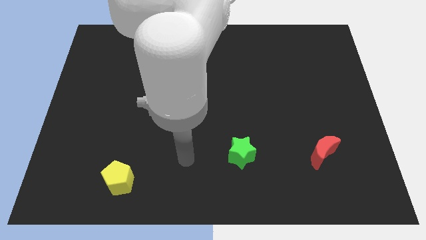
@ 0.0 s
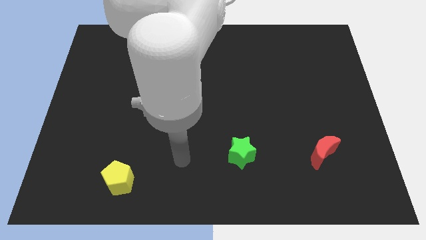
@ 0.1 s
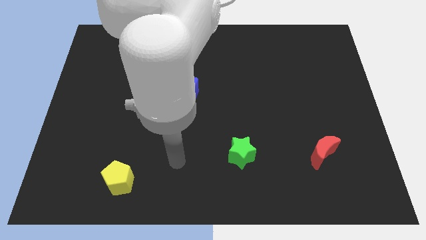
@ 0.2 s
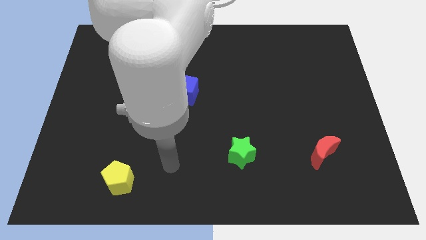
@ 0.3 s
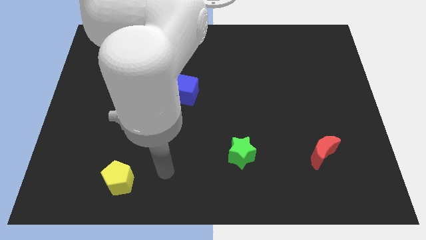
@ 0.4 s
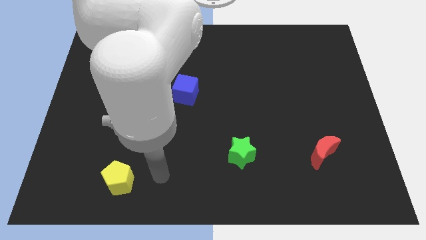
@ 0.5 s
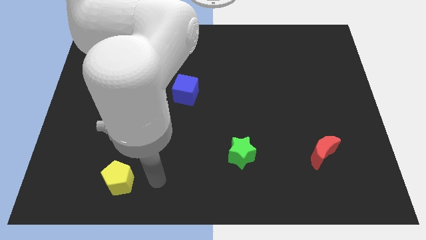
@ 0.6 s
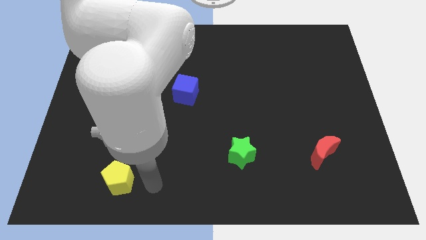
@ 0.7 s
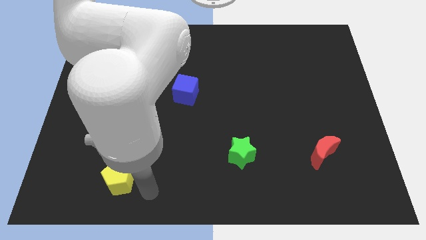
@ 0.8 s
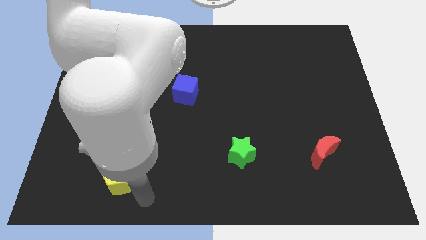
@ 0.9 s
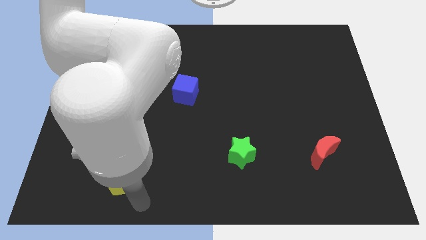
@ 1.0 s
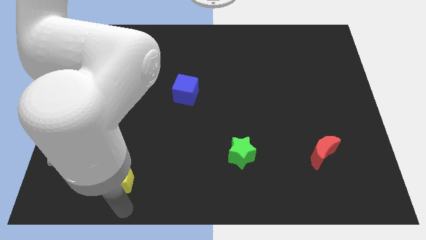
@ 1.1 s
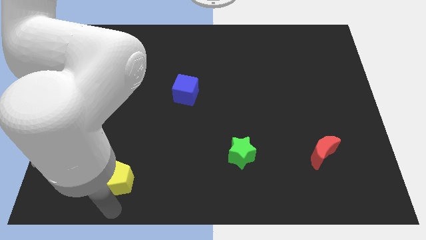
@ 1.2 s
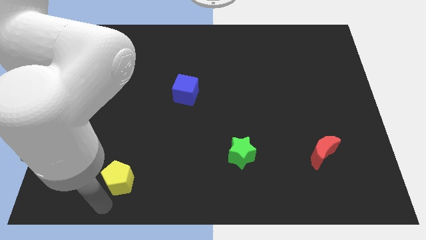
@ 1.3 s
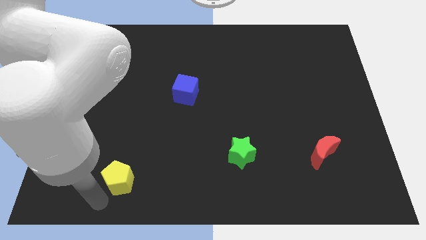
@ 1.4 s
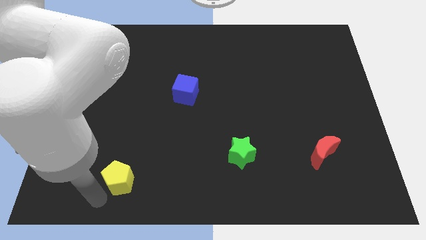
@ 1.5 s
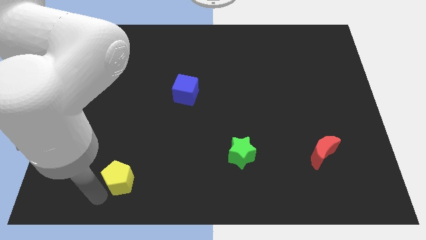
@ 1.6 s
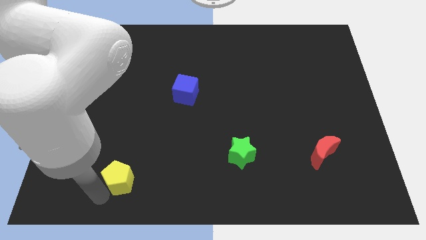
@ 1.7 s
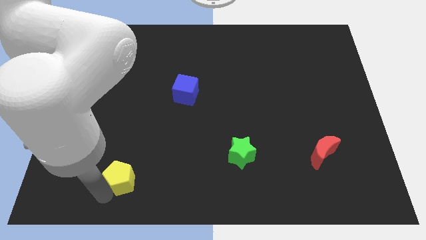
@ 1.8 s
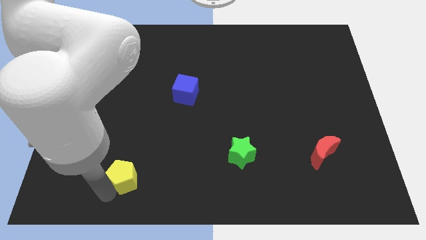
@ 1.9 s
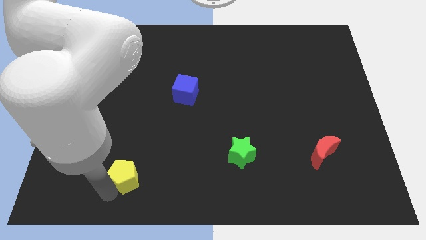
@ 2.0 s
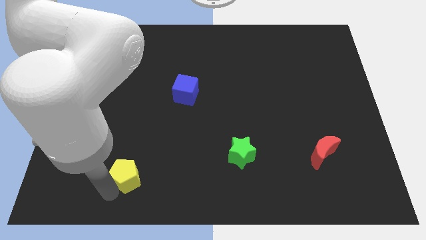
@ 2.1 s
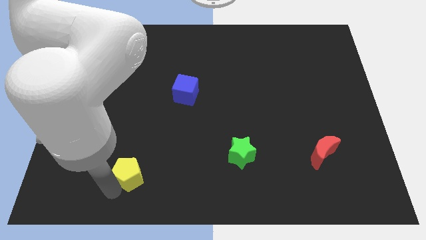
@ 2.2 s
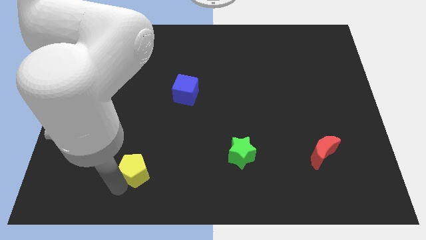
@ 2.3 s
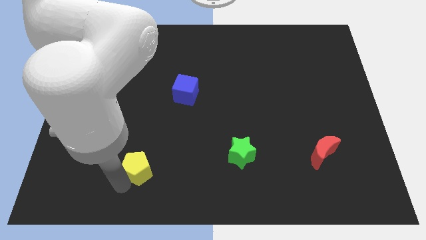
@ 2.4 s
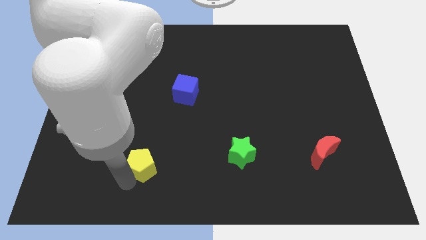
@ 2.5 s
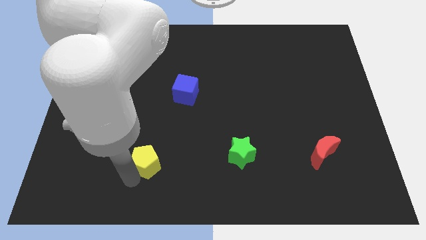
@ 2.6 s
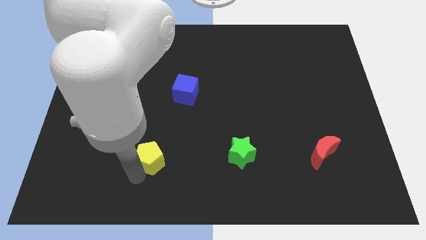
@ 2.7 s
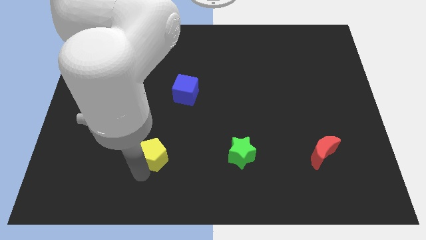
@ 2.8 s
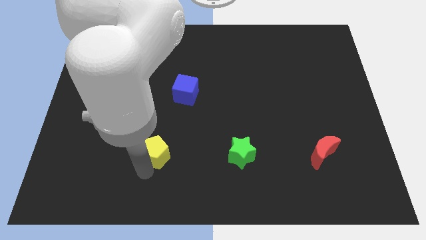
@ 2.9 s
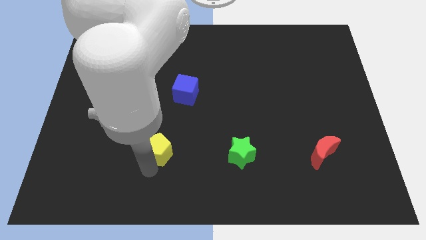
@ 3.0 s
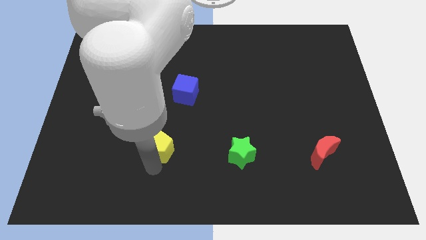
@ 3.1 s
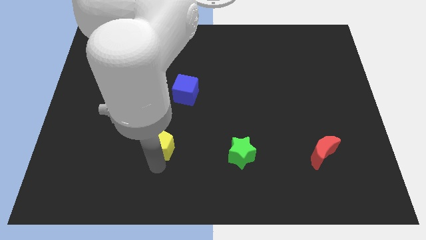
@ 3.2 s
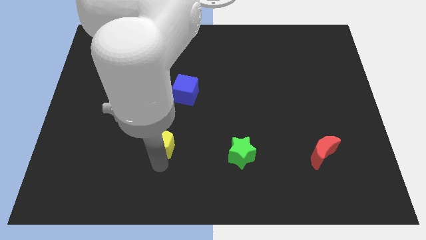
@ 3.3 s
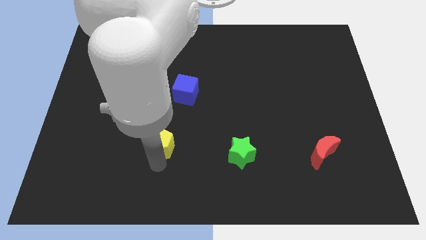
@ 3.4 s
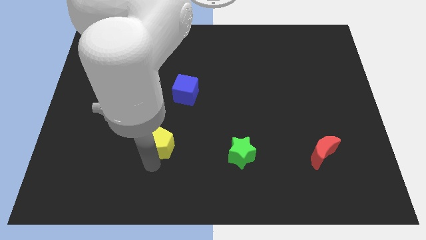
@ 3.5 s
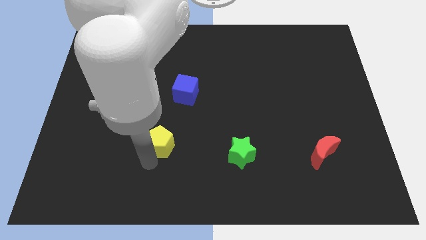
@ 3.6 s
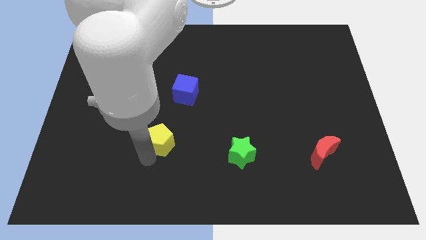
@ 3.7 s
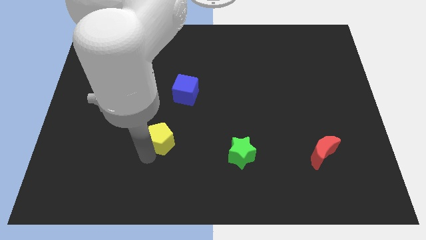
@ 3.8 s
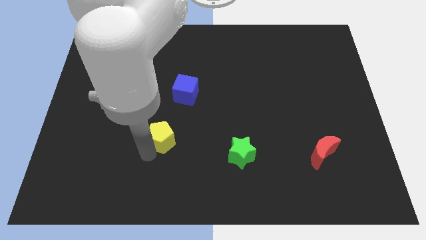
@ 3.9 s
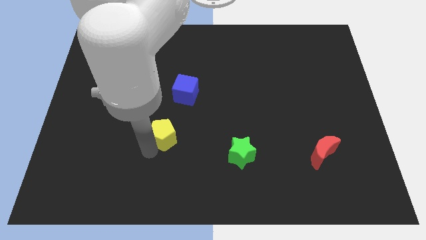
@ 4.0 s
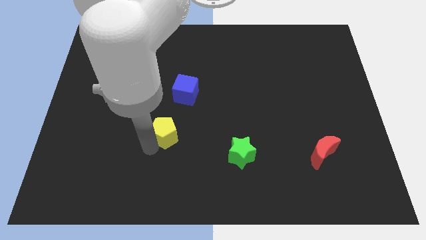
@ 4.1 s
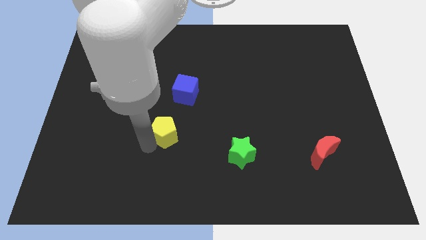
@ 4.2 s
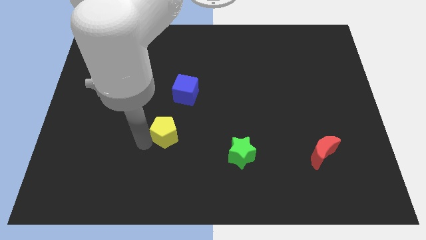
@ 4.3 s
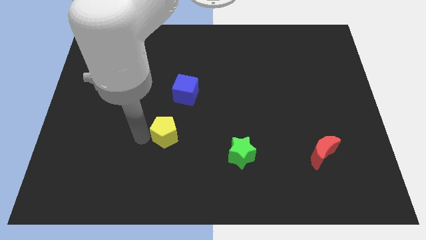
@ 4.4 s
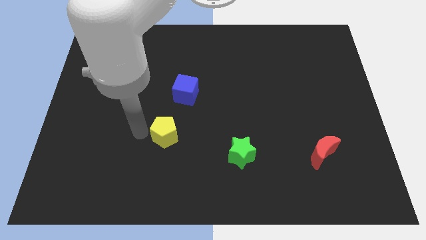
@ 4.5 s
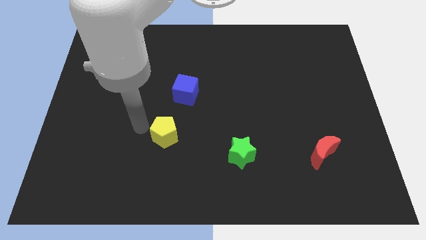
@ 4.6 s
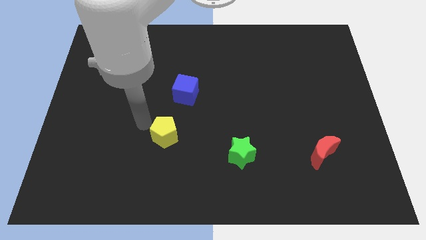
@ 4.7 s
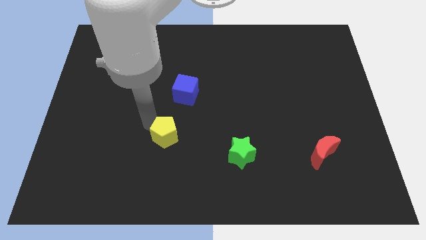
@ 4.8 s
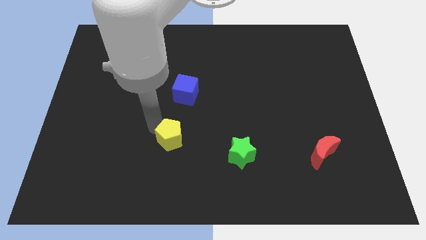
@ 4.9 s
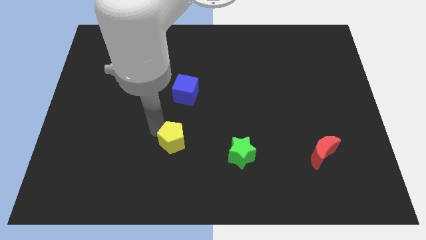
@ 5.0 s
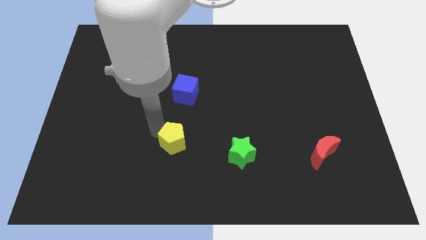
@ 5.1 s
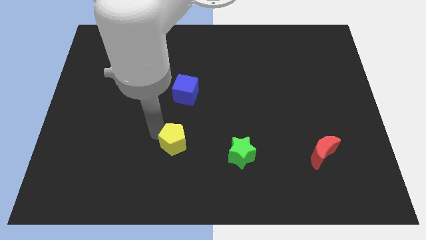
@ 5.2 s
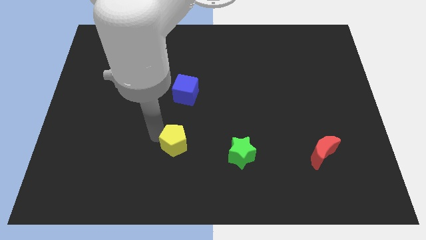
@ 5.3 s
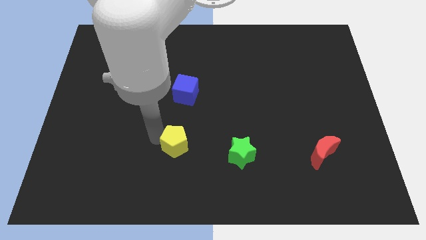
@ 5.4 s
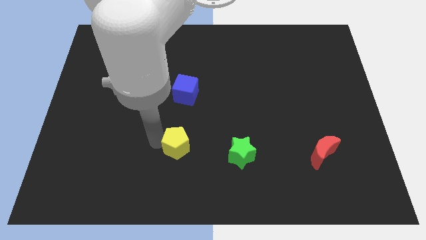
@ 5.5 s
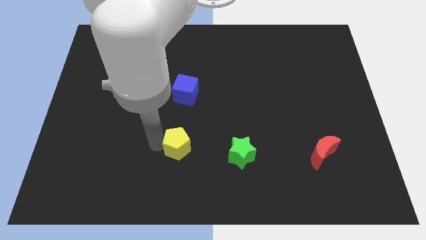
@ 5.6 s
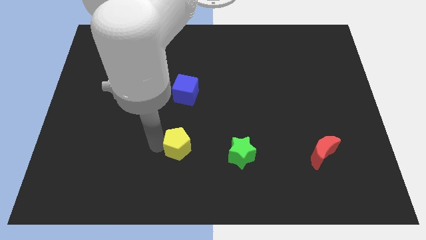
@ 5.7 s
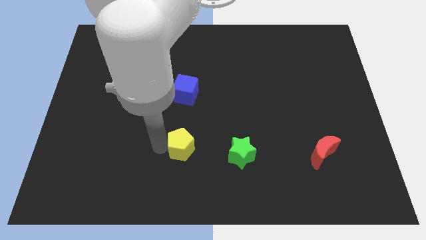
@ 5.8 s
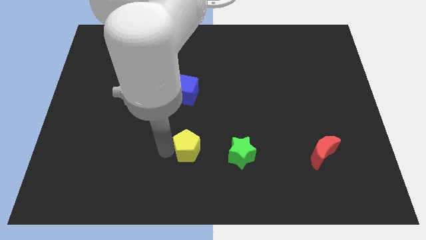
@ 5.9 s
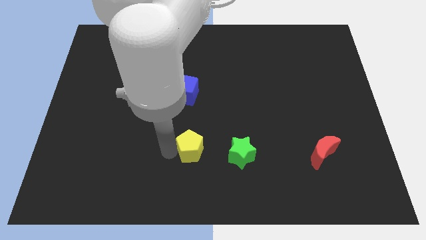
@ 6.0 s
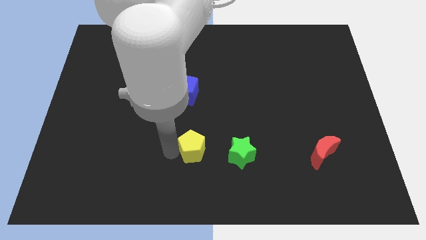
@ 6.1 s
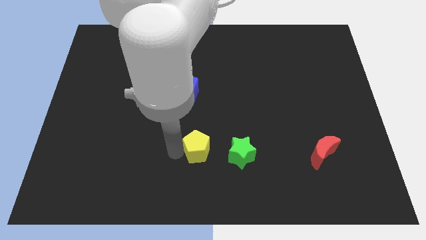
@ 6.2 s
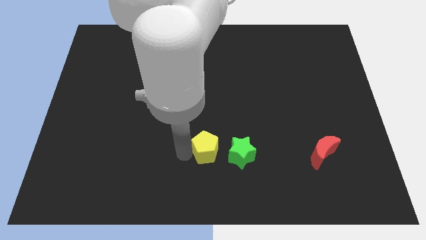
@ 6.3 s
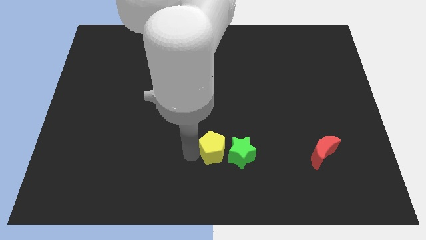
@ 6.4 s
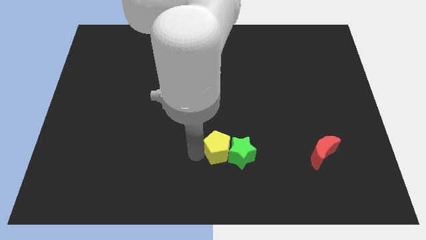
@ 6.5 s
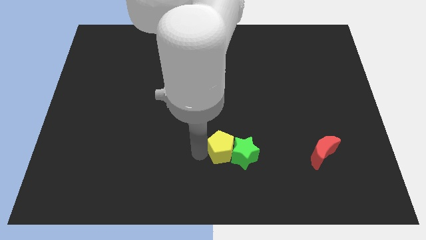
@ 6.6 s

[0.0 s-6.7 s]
slide the pentagon close to the green star

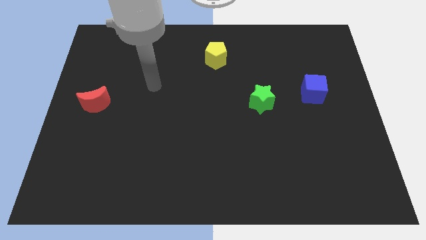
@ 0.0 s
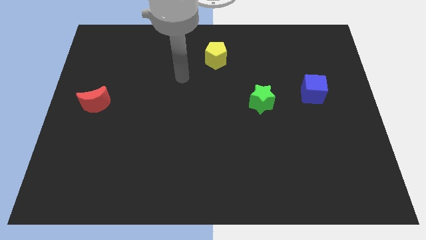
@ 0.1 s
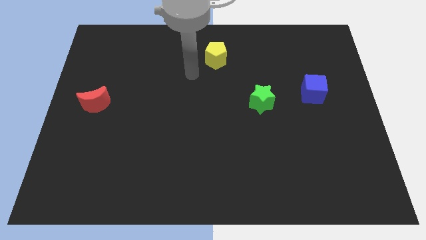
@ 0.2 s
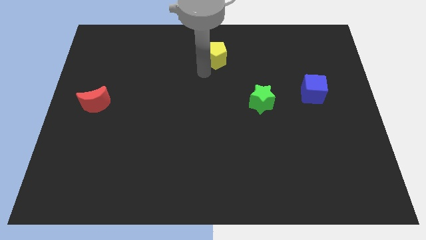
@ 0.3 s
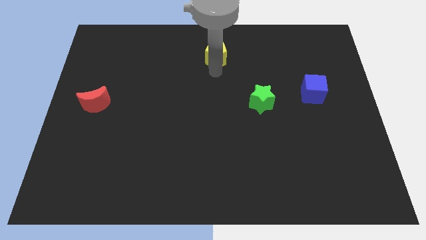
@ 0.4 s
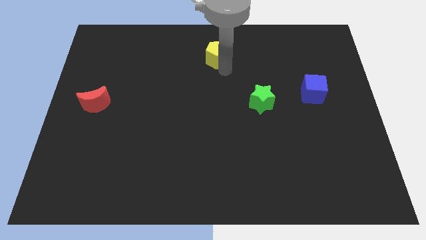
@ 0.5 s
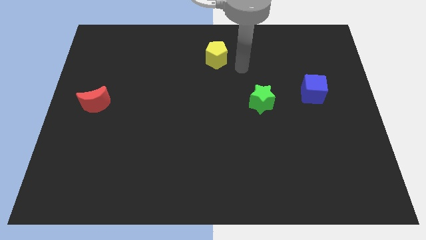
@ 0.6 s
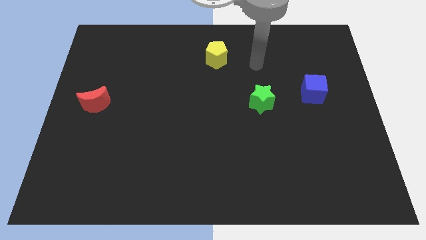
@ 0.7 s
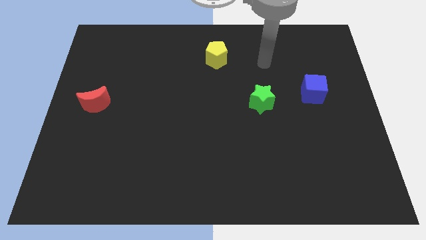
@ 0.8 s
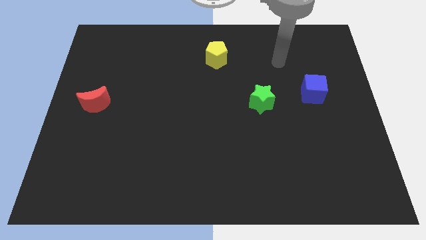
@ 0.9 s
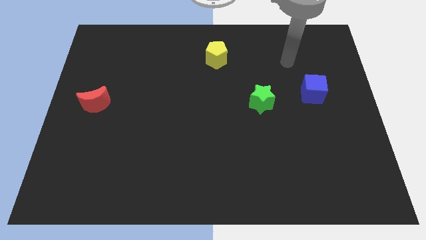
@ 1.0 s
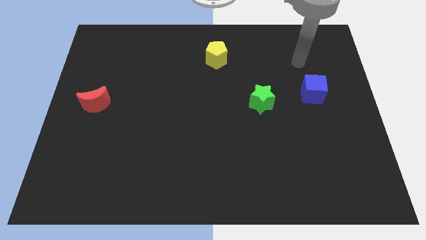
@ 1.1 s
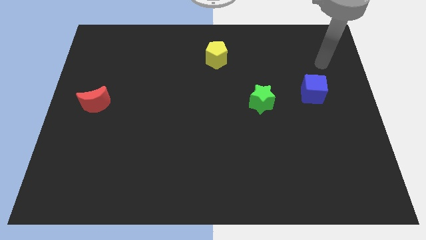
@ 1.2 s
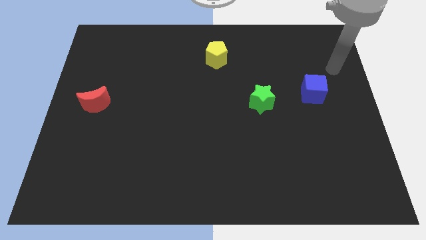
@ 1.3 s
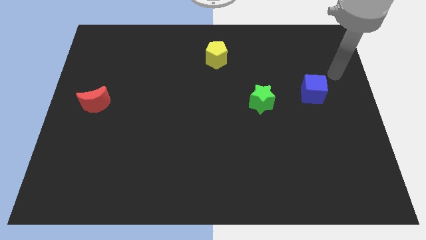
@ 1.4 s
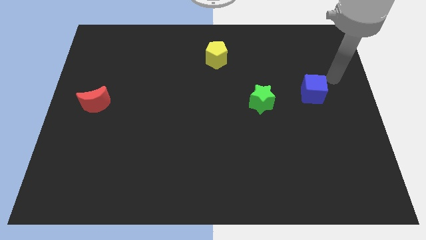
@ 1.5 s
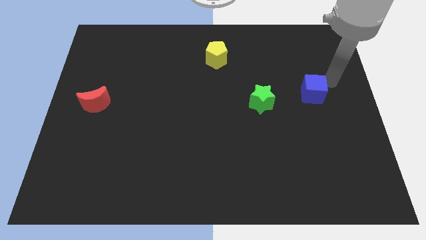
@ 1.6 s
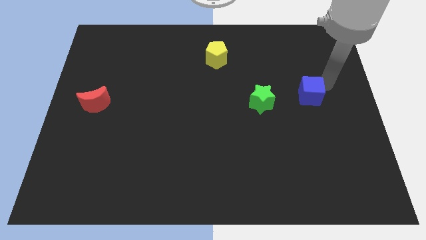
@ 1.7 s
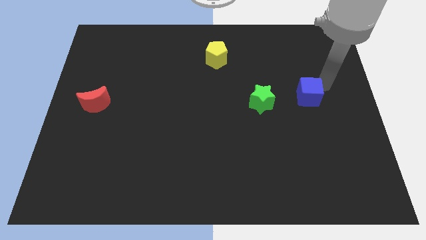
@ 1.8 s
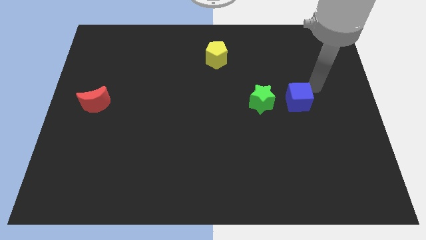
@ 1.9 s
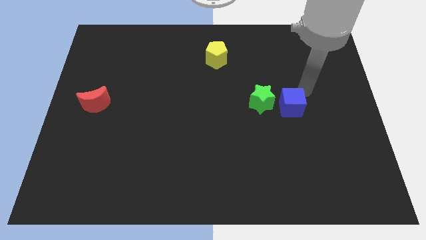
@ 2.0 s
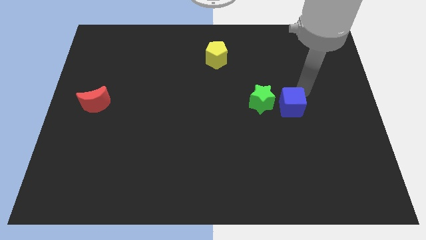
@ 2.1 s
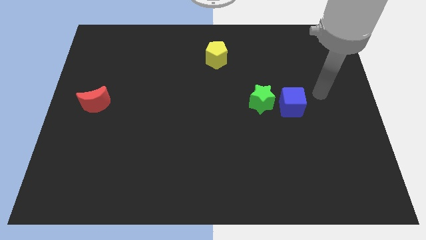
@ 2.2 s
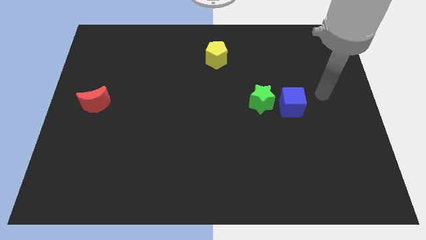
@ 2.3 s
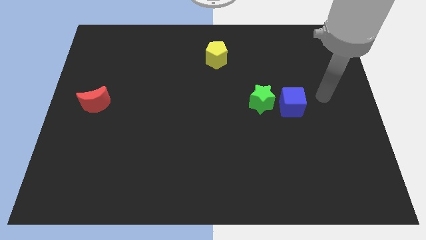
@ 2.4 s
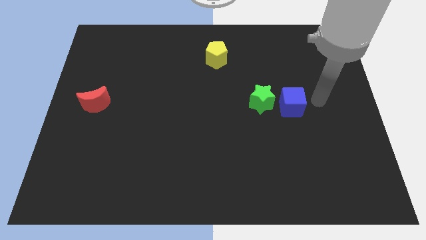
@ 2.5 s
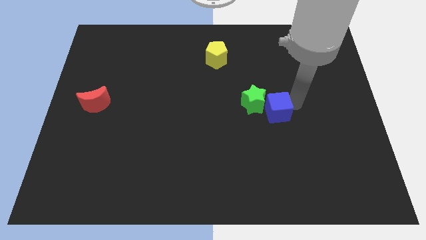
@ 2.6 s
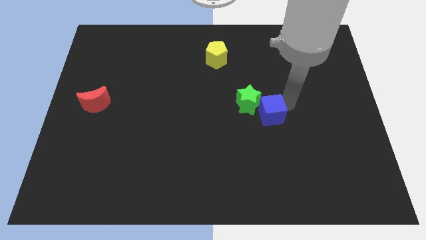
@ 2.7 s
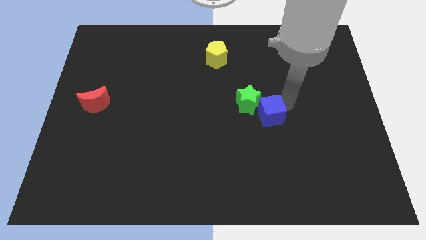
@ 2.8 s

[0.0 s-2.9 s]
slide the blue cube next to the star
